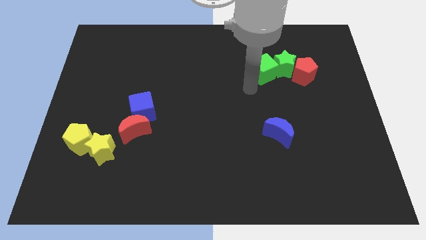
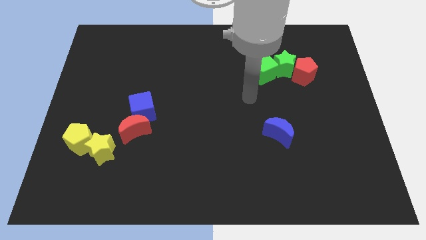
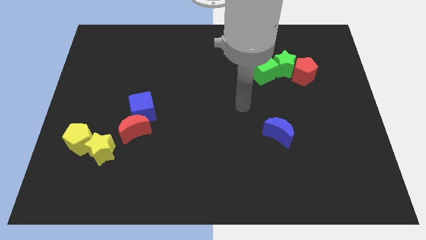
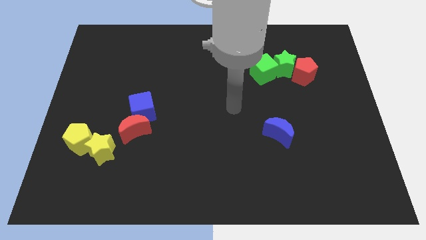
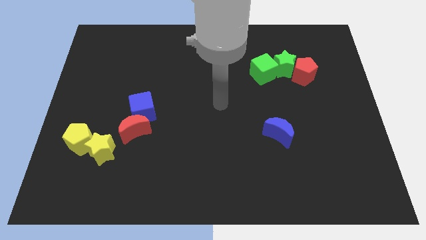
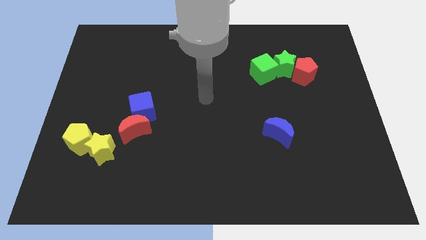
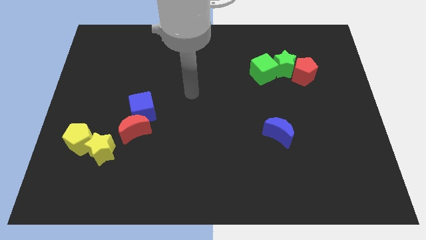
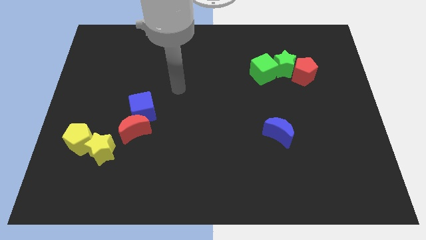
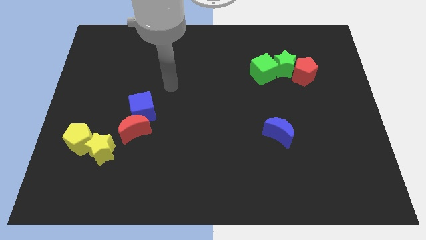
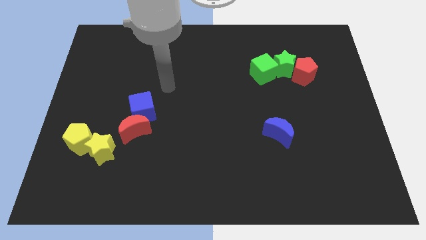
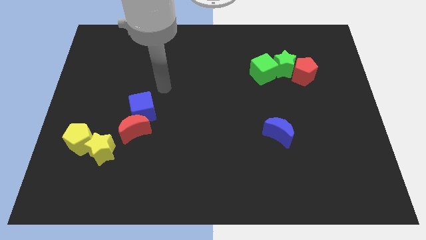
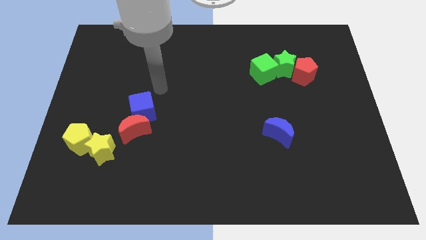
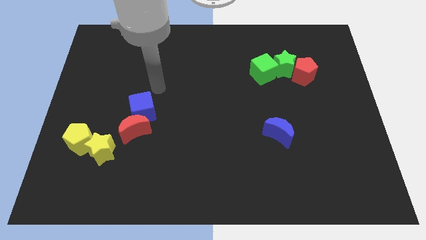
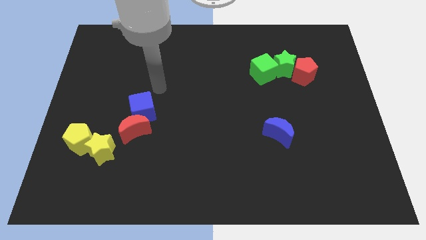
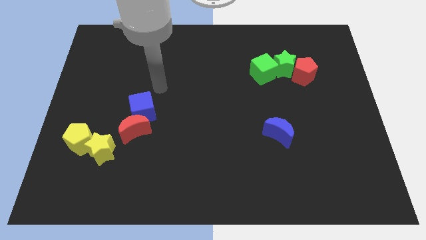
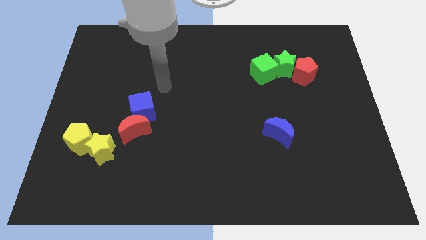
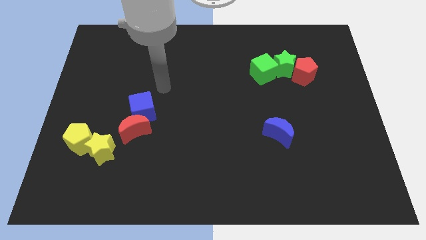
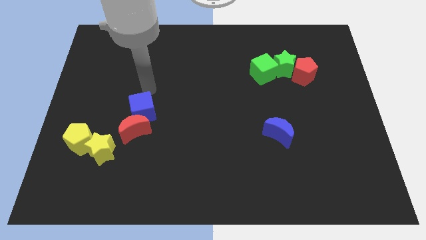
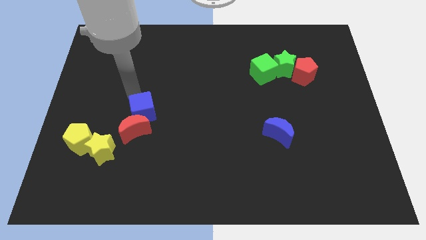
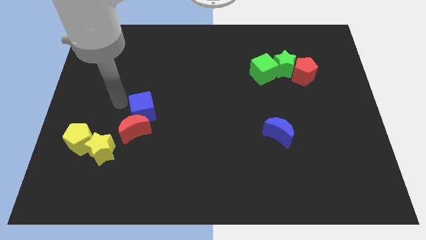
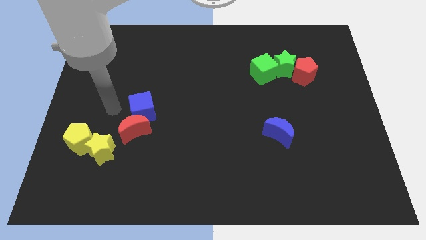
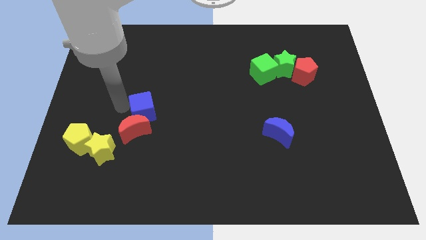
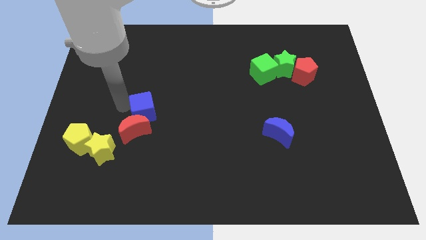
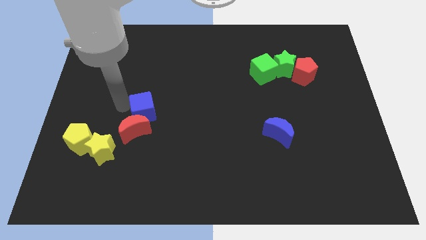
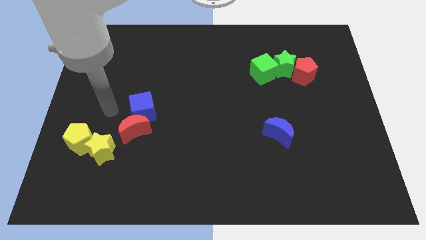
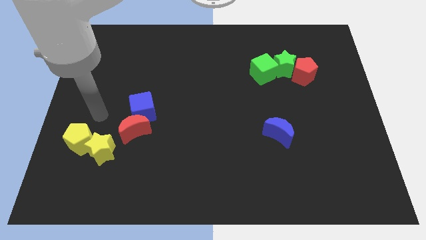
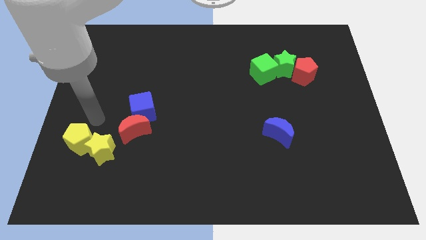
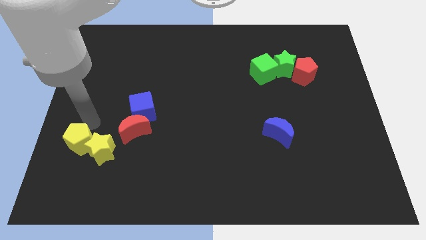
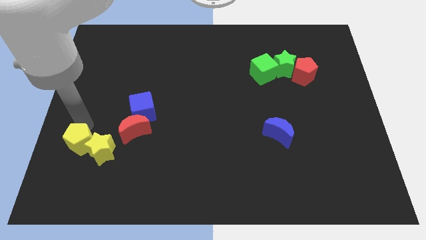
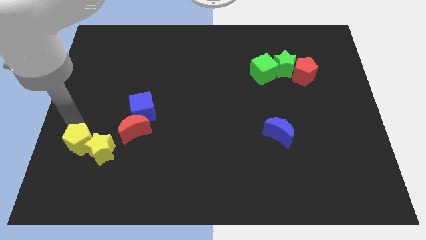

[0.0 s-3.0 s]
point your arm at the top of the yellow pentagon

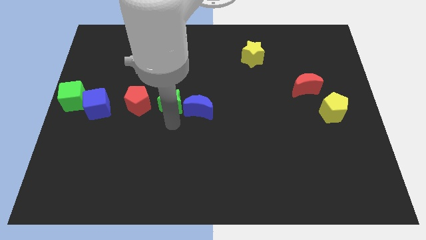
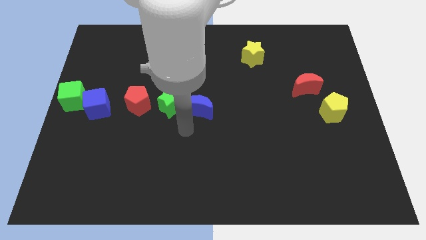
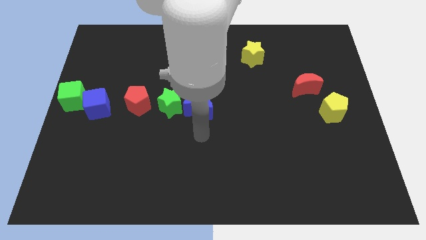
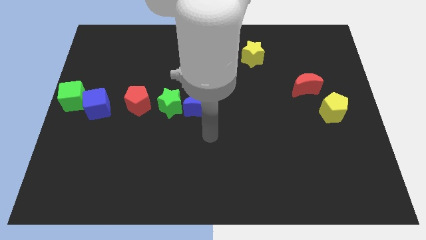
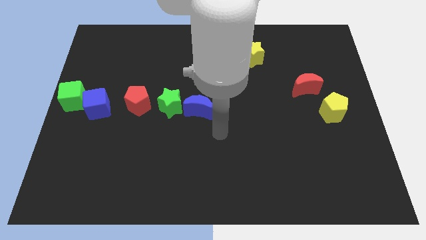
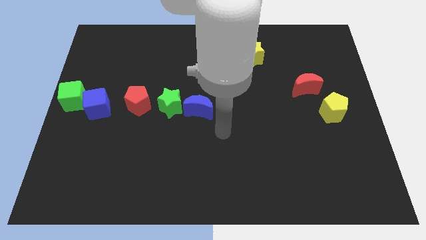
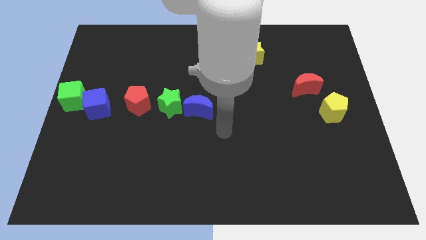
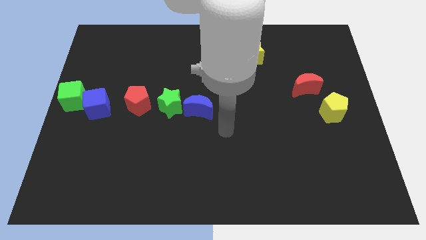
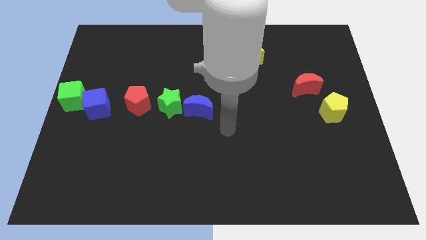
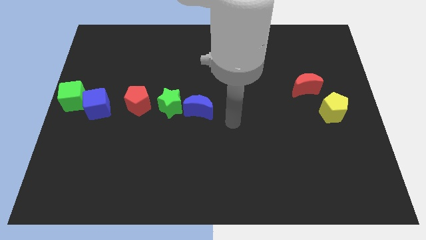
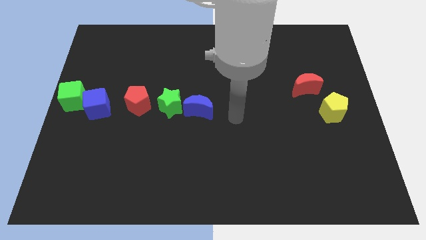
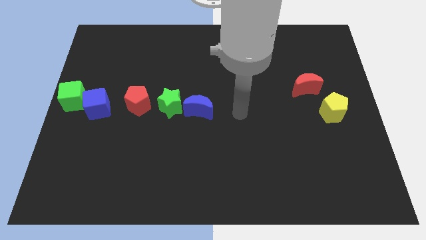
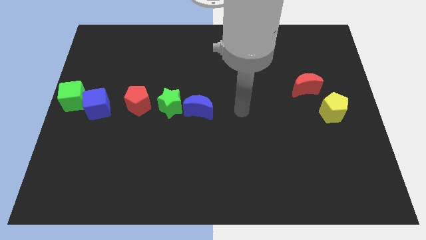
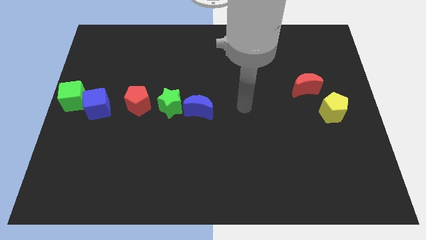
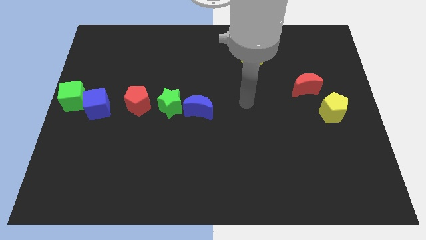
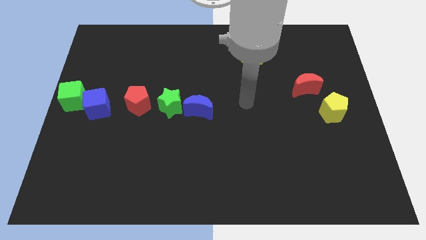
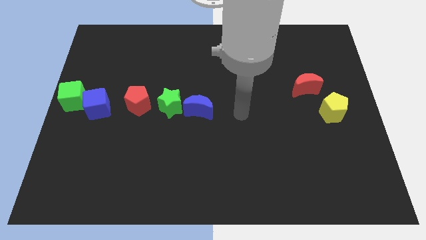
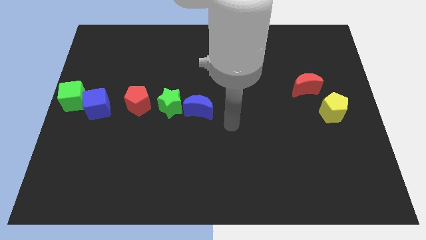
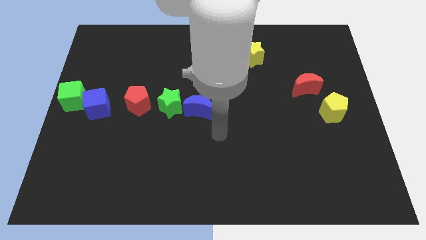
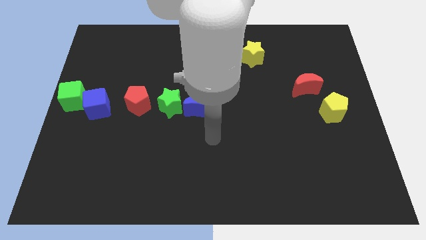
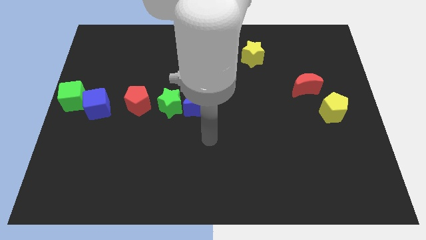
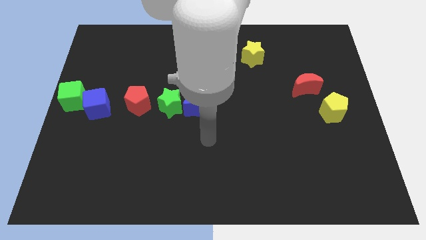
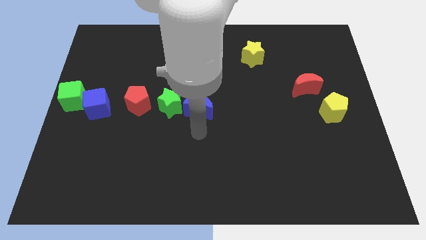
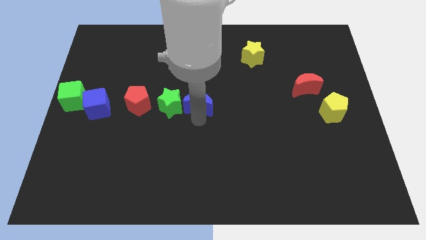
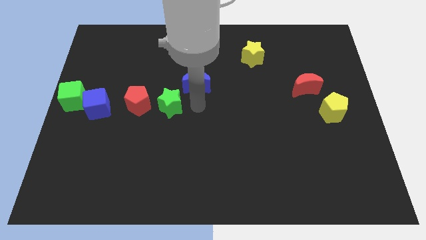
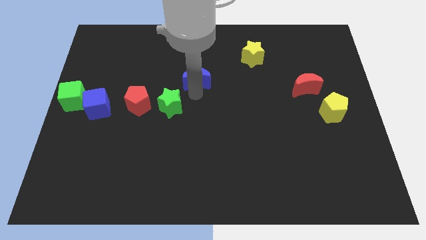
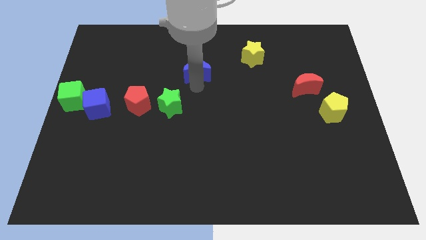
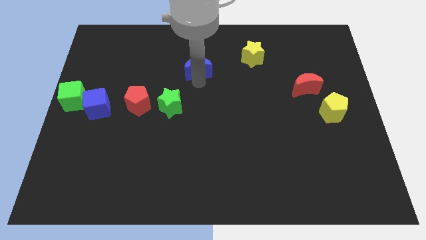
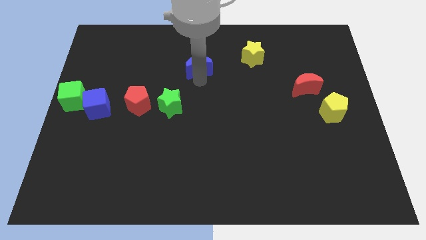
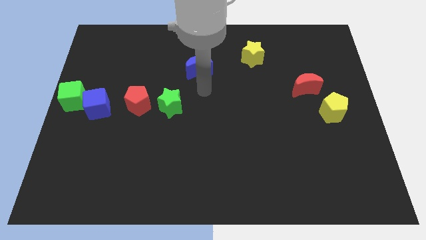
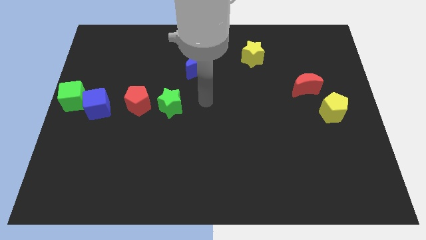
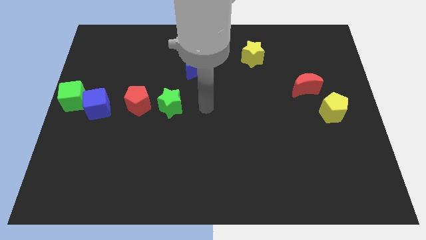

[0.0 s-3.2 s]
separate the blue moon from green star

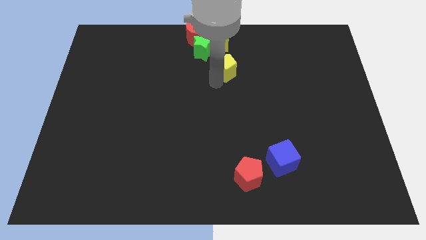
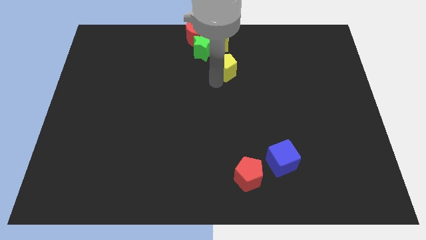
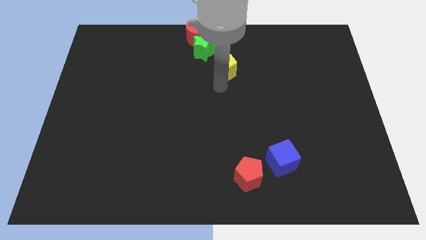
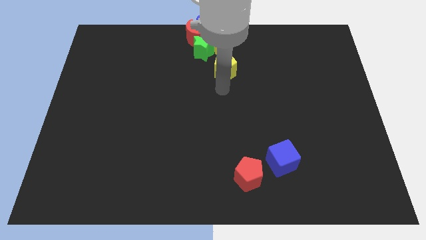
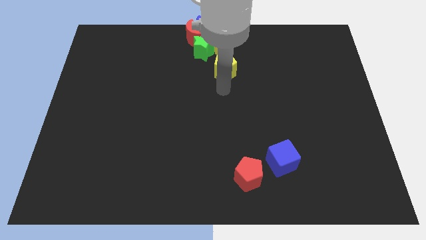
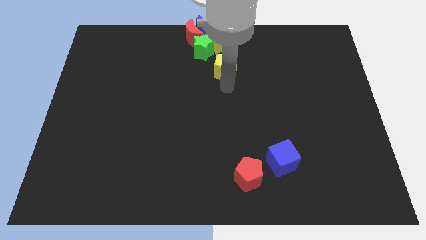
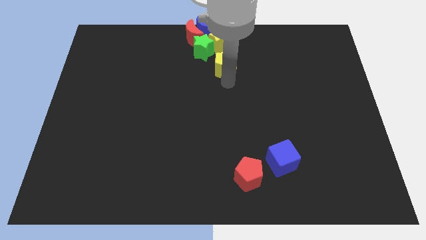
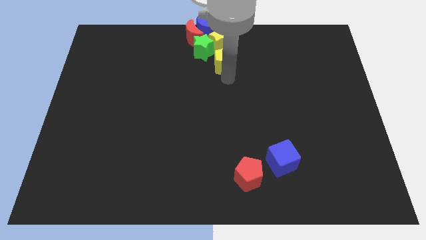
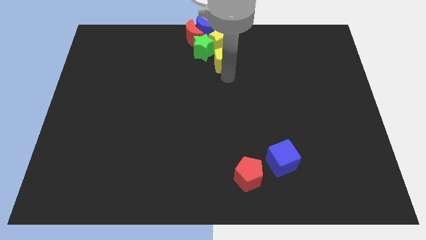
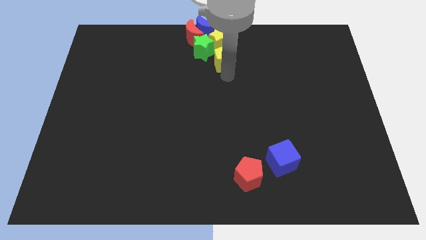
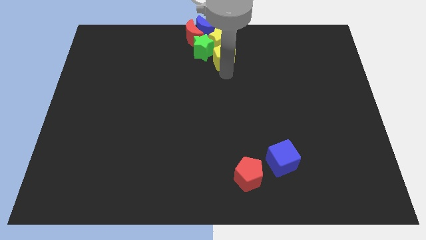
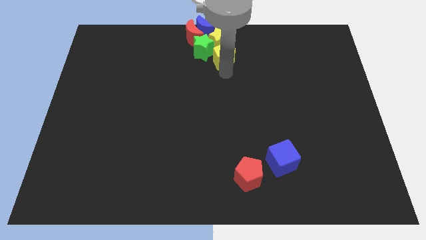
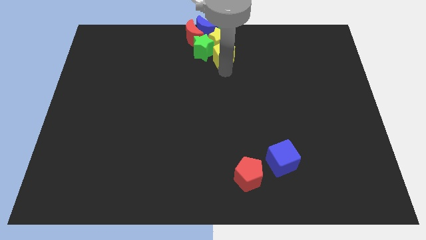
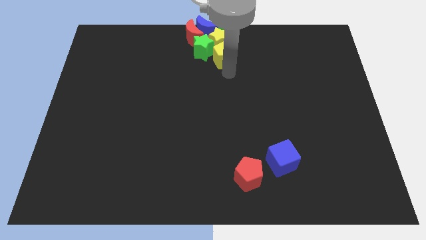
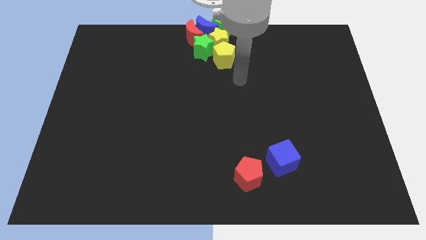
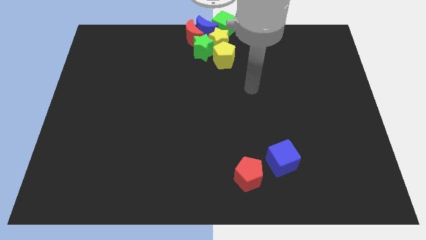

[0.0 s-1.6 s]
move the yellow pentagon to the bottom of the yellow star

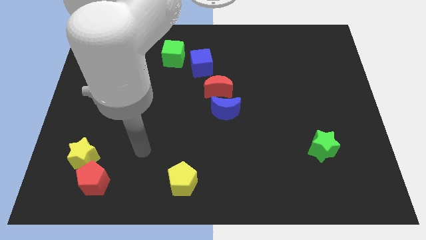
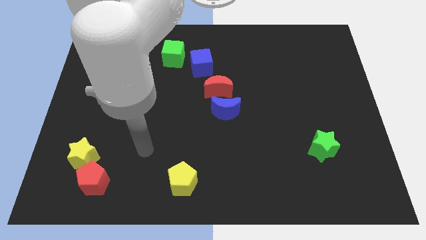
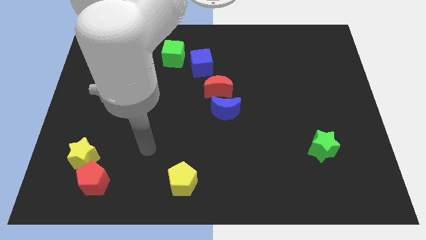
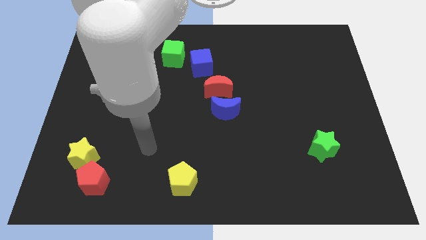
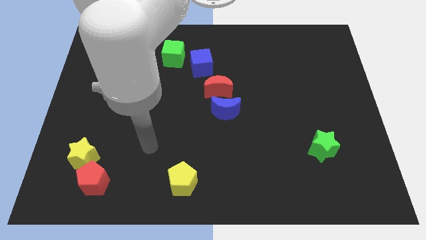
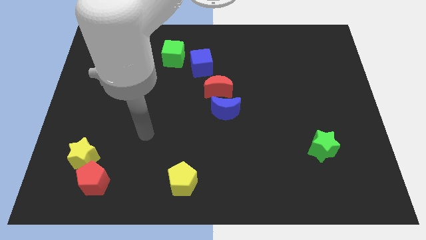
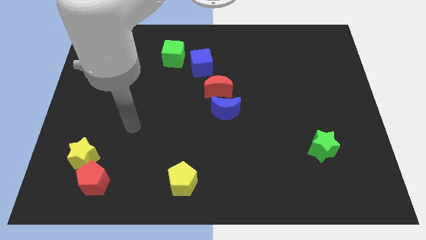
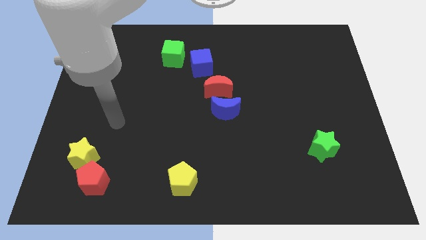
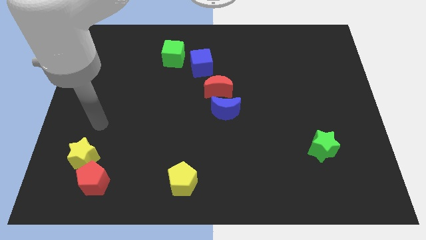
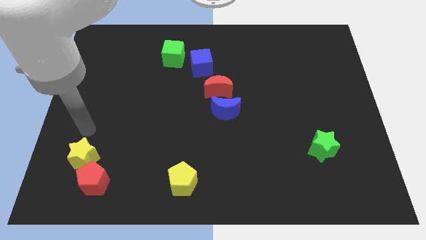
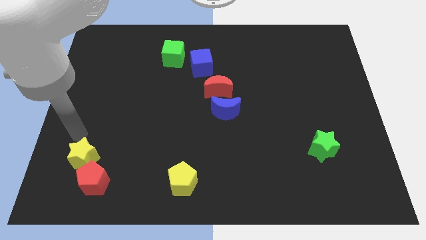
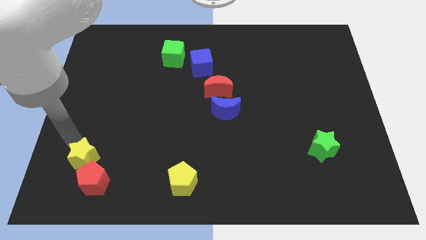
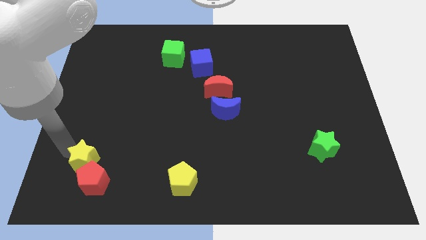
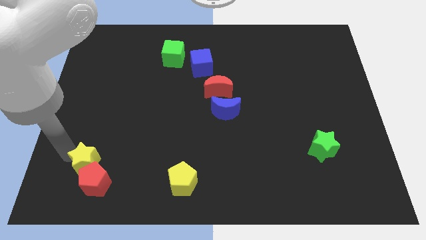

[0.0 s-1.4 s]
push the yellow star into the red pentagon
